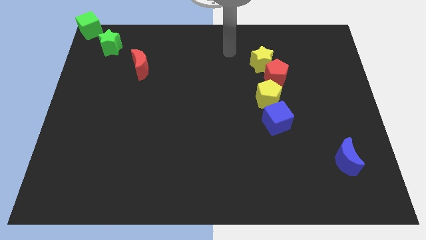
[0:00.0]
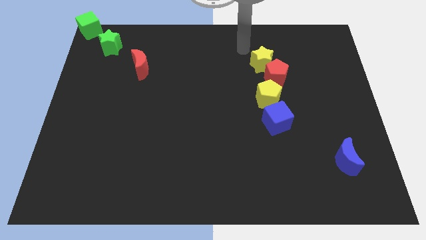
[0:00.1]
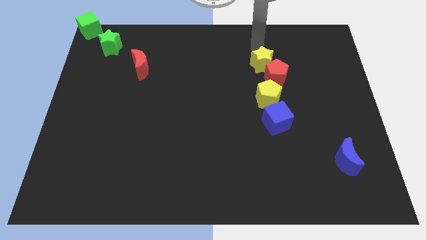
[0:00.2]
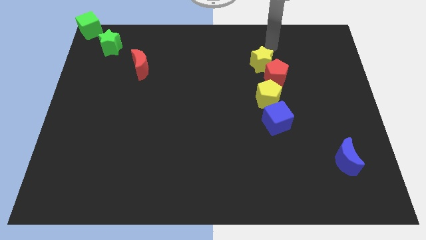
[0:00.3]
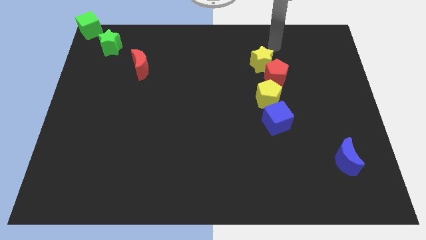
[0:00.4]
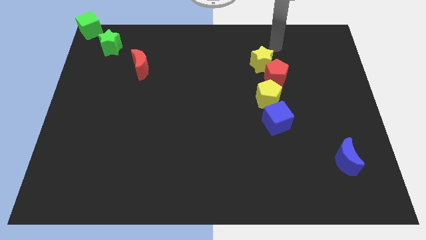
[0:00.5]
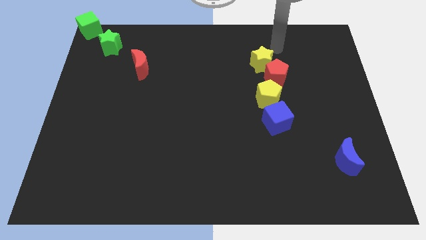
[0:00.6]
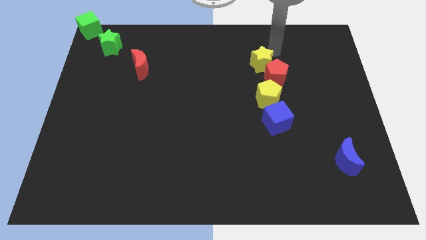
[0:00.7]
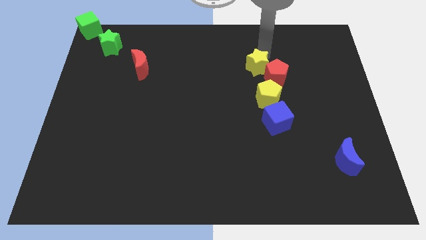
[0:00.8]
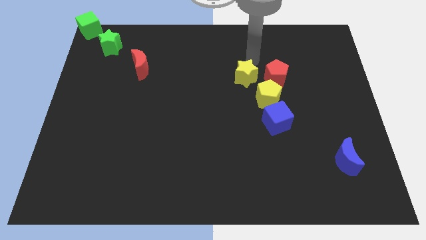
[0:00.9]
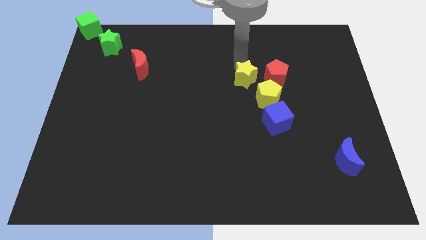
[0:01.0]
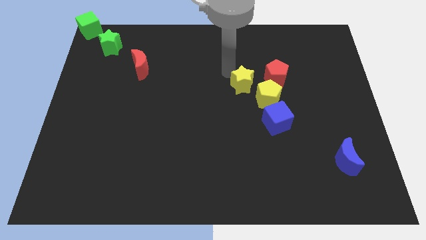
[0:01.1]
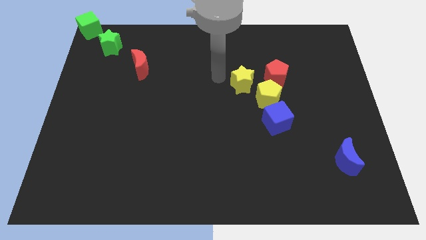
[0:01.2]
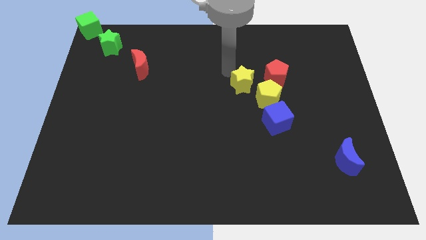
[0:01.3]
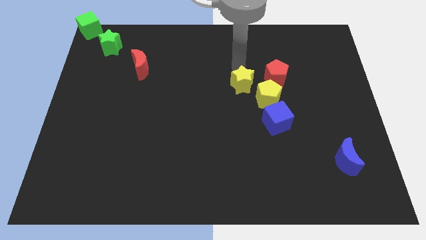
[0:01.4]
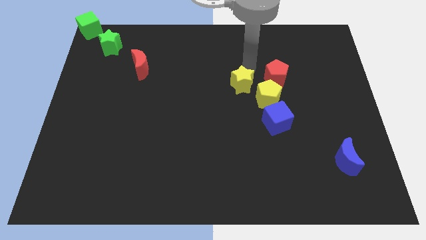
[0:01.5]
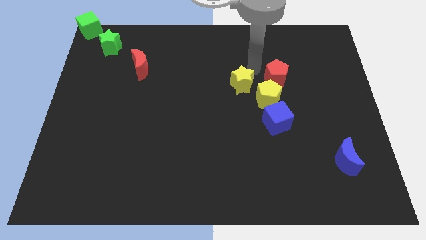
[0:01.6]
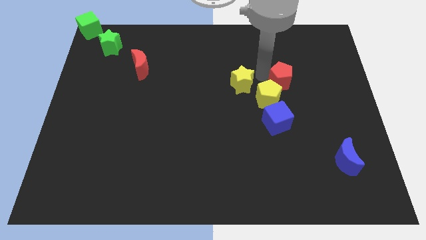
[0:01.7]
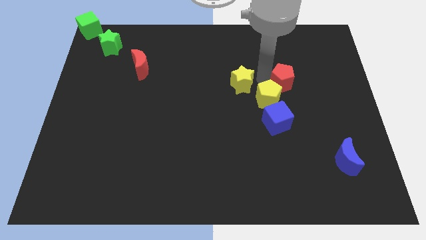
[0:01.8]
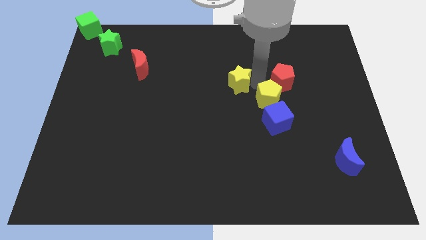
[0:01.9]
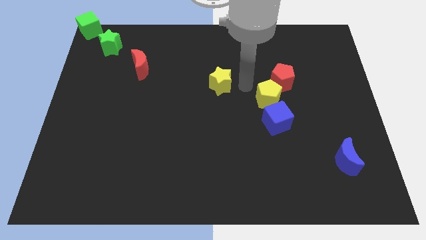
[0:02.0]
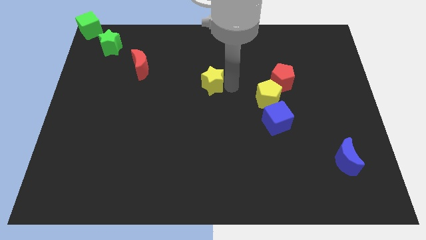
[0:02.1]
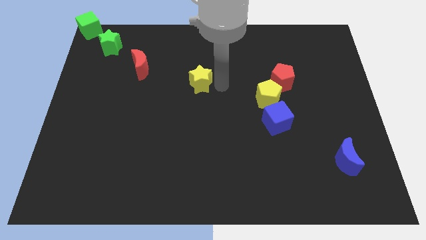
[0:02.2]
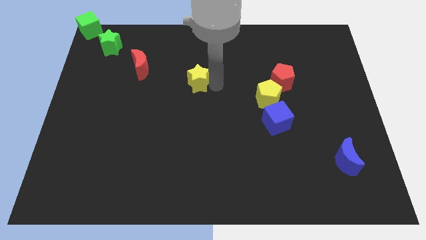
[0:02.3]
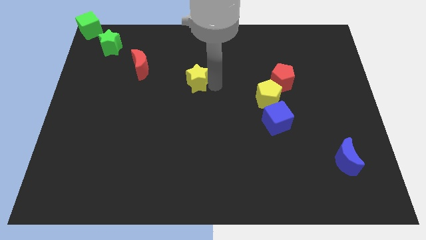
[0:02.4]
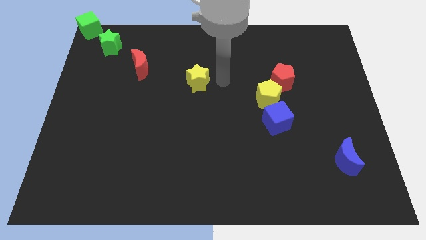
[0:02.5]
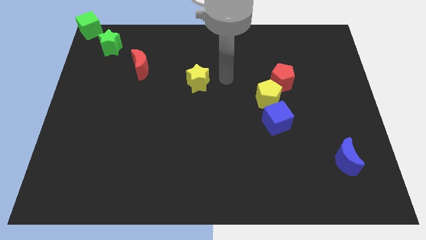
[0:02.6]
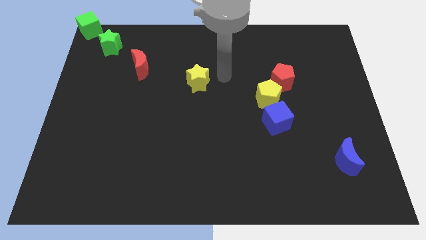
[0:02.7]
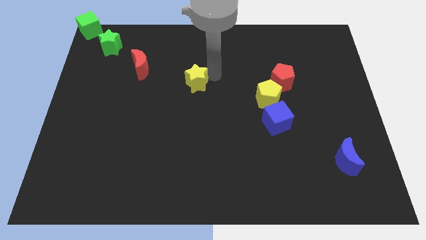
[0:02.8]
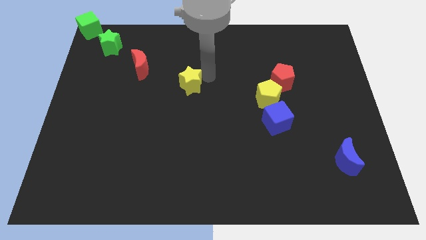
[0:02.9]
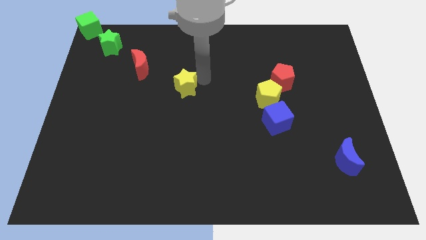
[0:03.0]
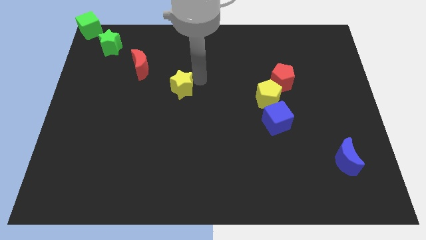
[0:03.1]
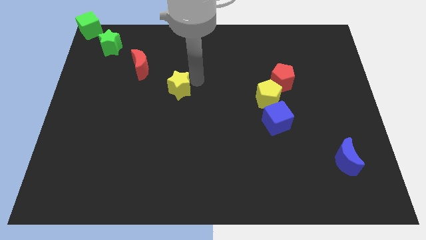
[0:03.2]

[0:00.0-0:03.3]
move the yellow star to the centre of the board

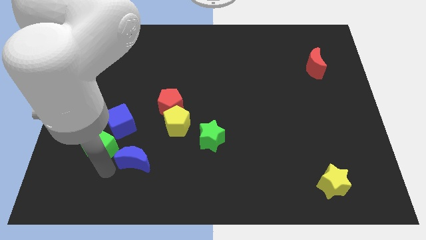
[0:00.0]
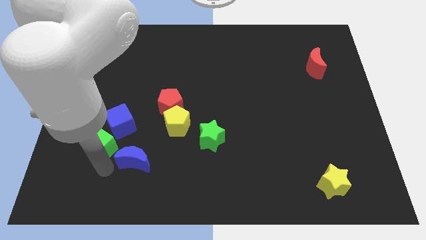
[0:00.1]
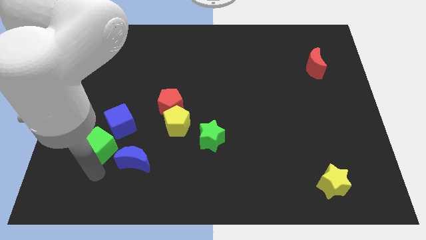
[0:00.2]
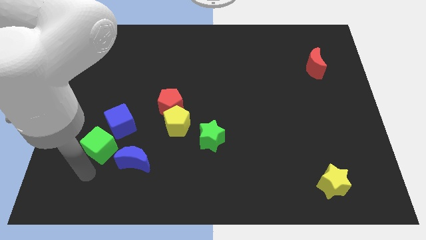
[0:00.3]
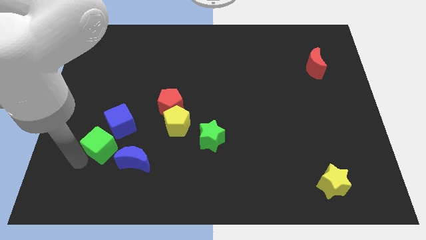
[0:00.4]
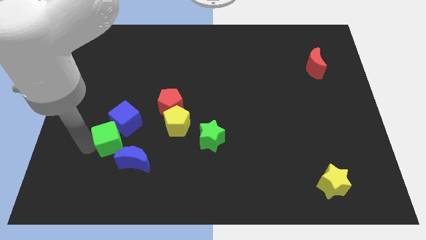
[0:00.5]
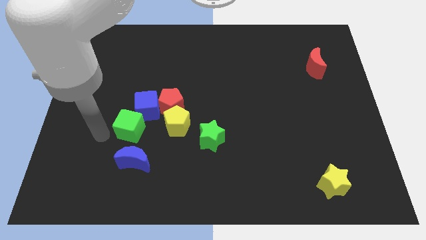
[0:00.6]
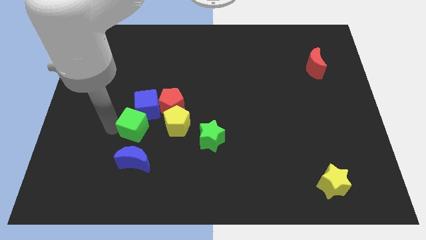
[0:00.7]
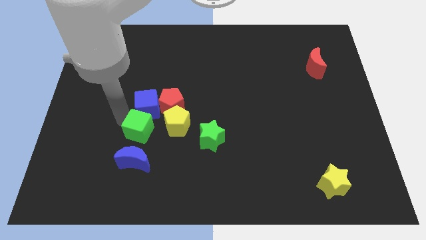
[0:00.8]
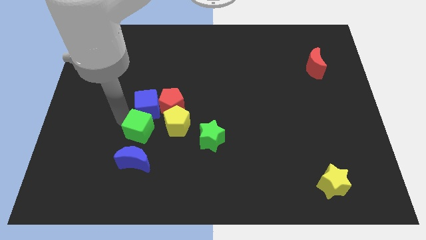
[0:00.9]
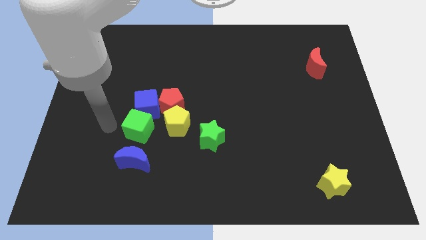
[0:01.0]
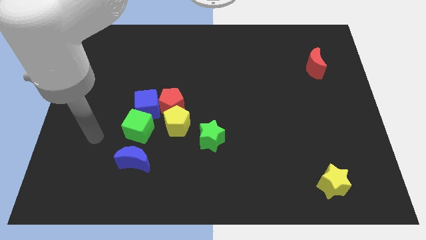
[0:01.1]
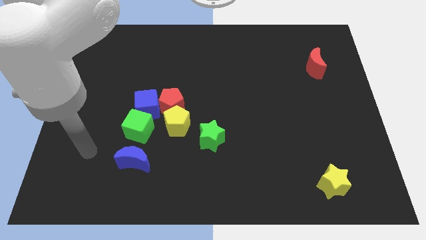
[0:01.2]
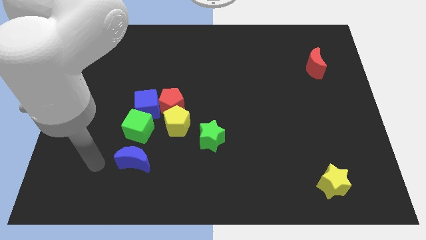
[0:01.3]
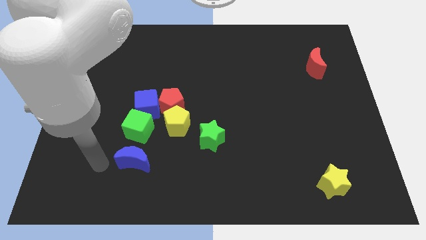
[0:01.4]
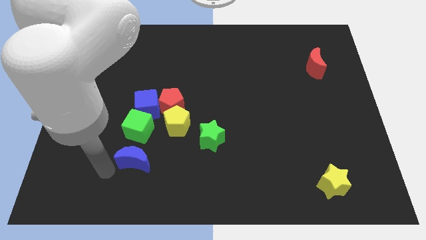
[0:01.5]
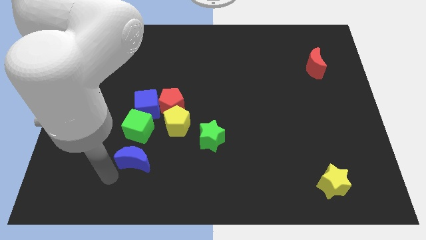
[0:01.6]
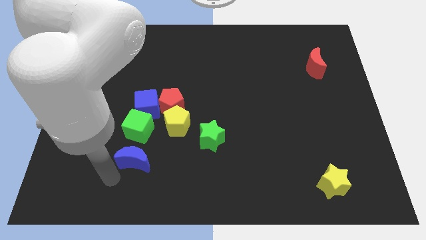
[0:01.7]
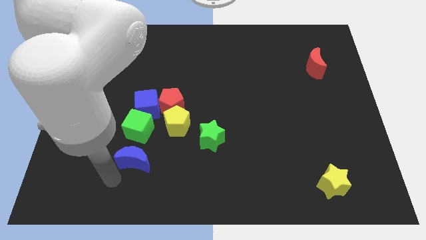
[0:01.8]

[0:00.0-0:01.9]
move the green cube into the blue cube

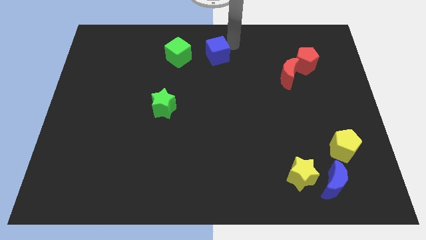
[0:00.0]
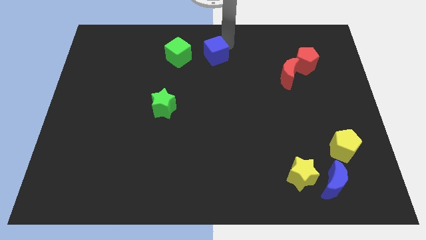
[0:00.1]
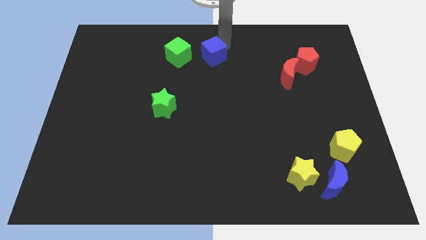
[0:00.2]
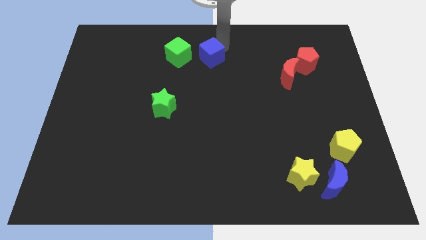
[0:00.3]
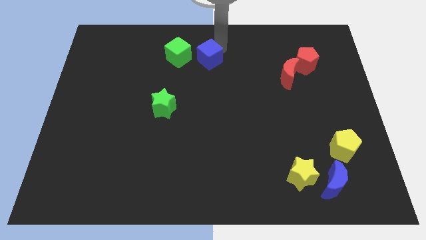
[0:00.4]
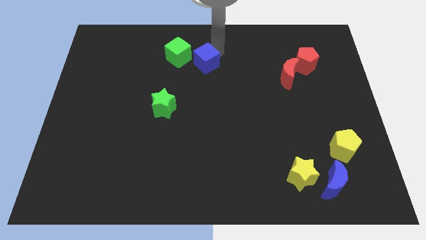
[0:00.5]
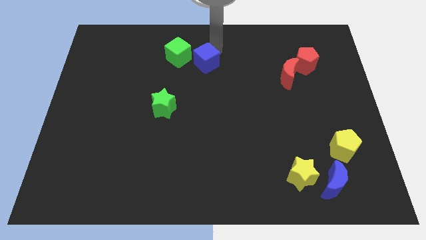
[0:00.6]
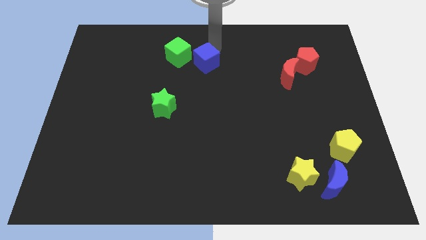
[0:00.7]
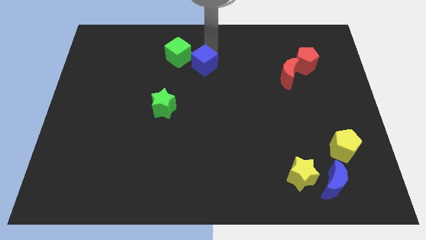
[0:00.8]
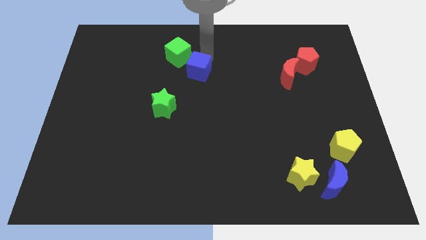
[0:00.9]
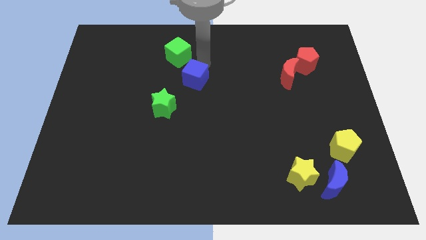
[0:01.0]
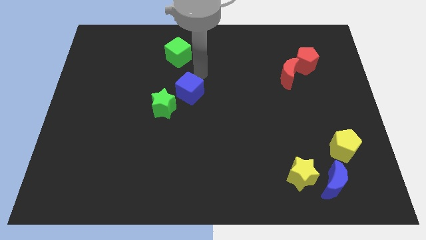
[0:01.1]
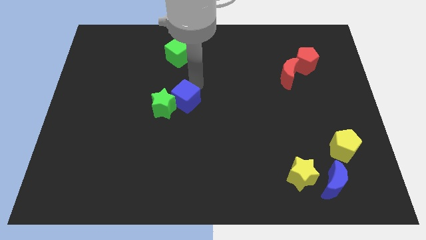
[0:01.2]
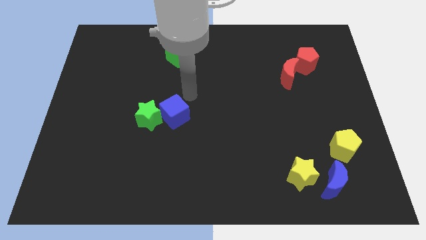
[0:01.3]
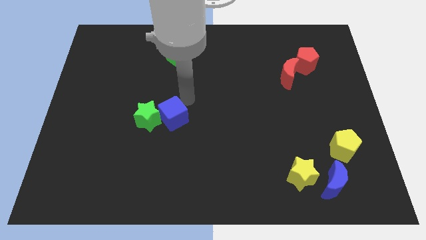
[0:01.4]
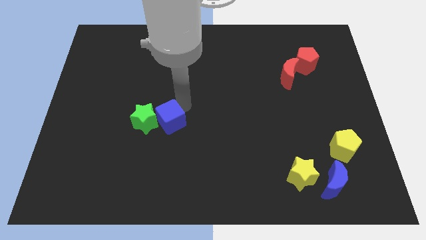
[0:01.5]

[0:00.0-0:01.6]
push the blue cube on right side to green star

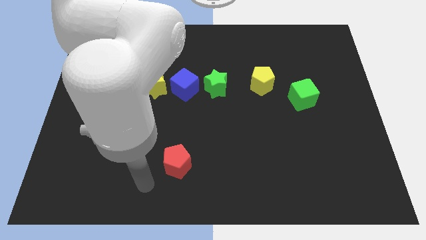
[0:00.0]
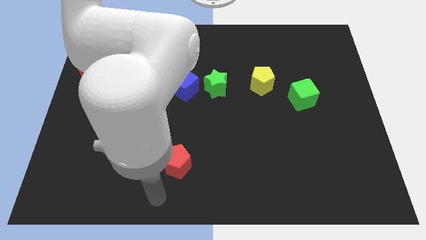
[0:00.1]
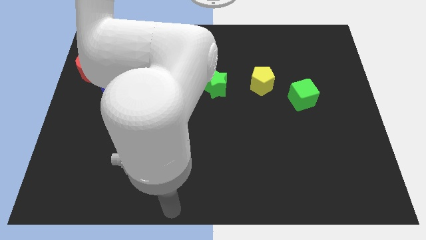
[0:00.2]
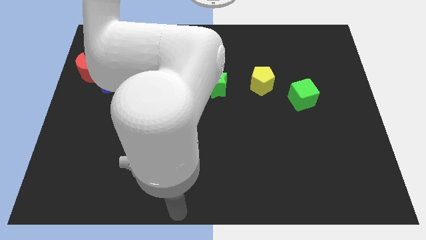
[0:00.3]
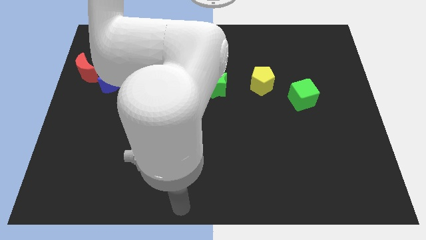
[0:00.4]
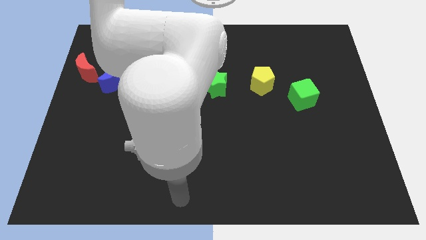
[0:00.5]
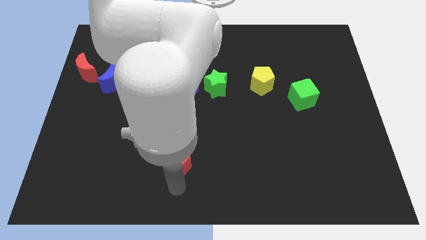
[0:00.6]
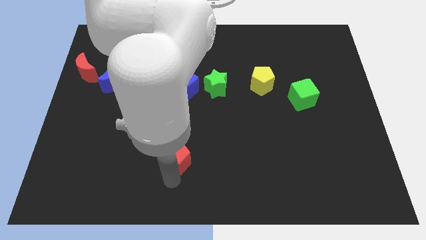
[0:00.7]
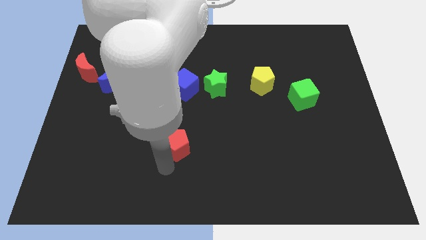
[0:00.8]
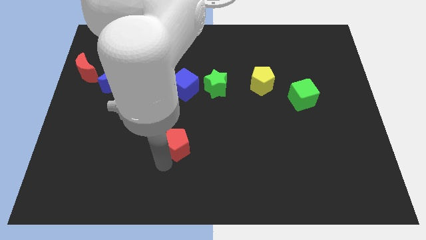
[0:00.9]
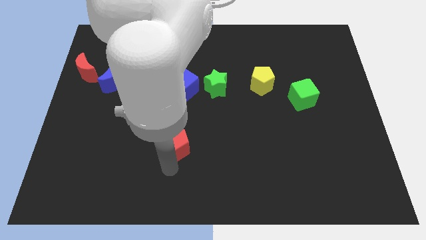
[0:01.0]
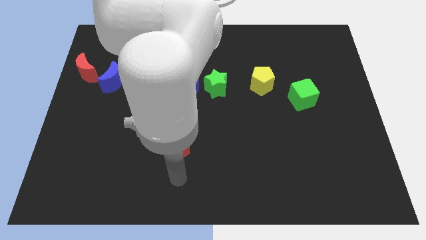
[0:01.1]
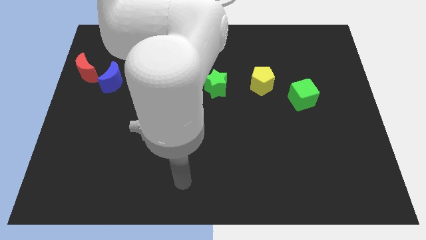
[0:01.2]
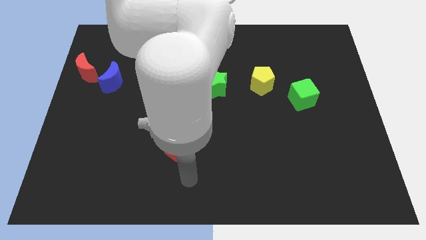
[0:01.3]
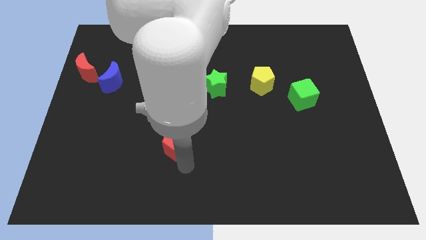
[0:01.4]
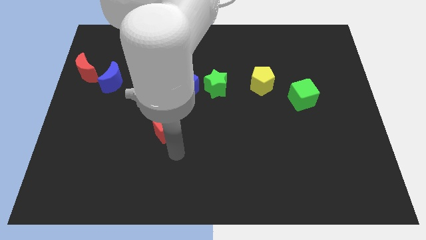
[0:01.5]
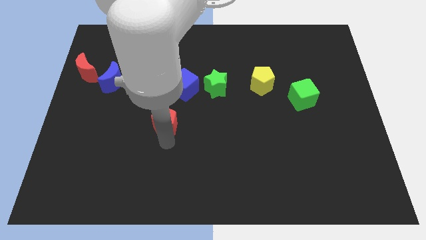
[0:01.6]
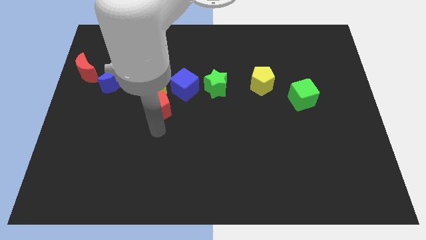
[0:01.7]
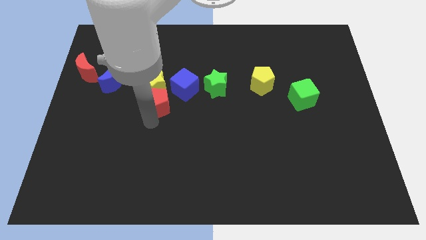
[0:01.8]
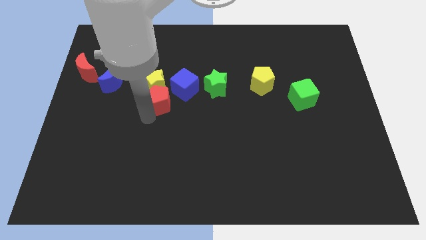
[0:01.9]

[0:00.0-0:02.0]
move the red pentagon into the yellow star
